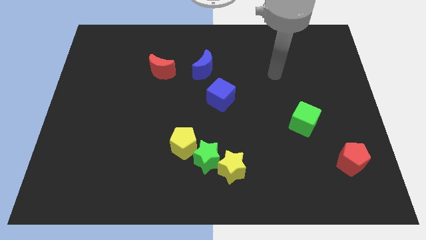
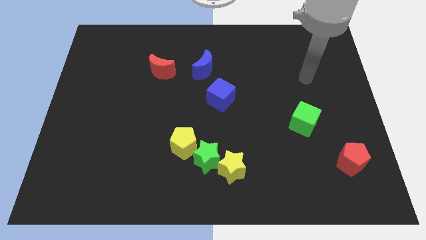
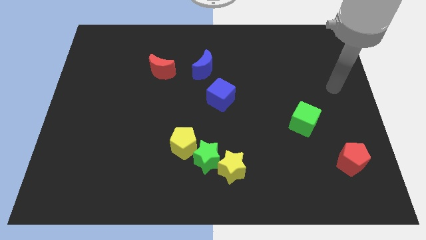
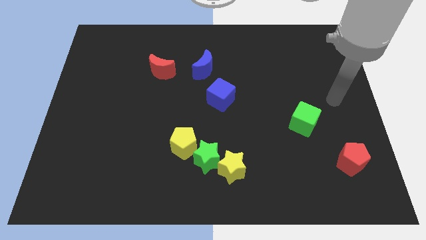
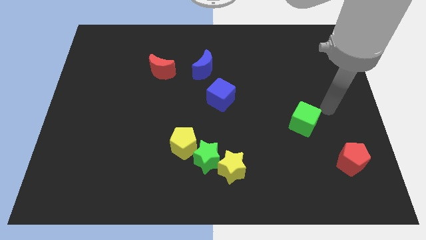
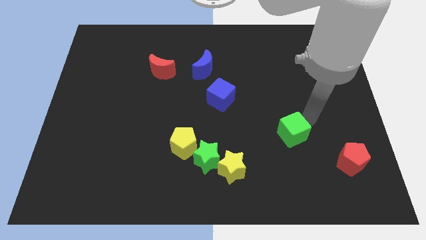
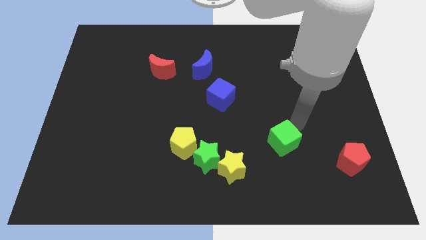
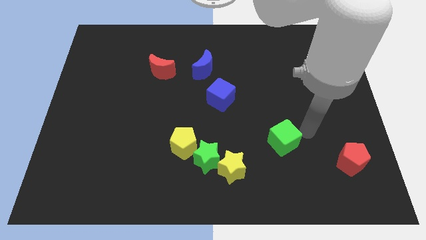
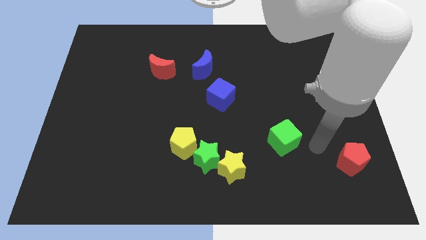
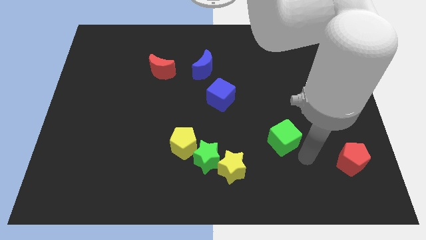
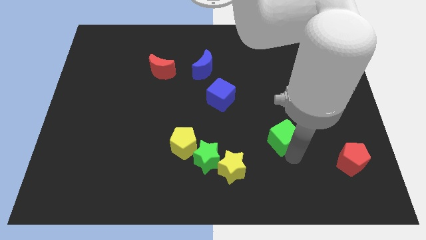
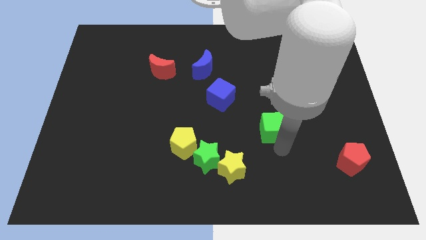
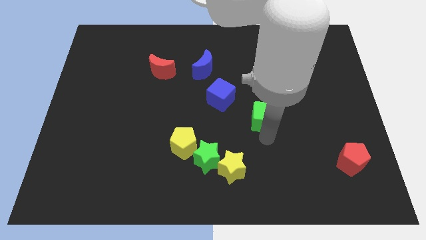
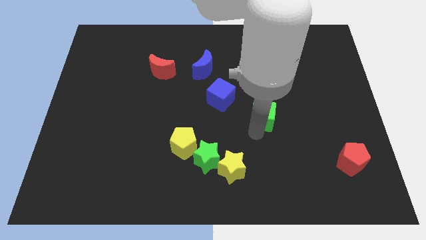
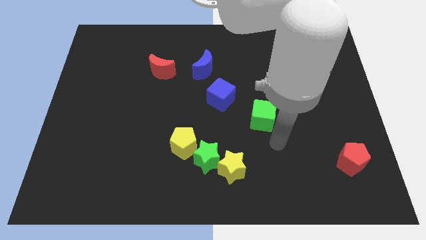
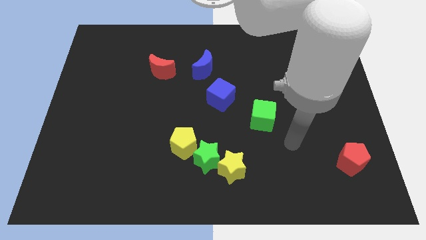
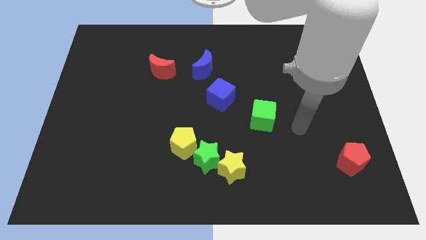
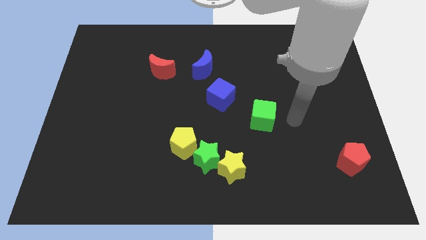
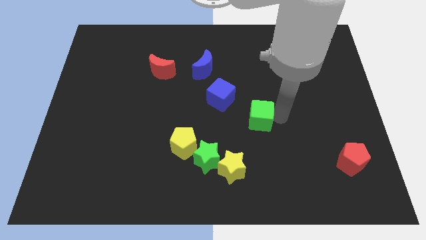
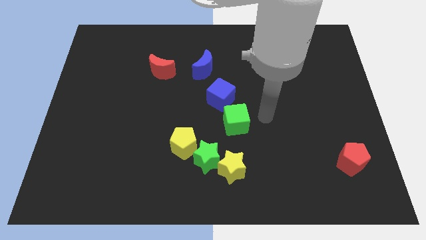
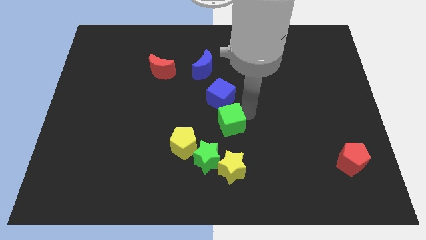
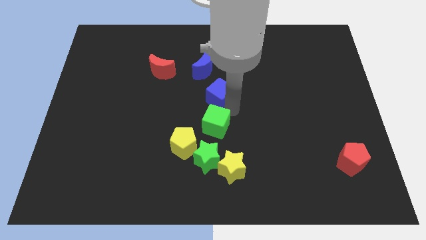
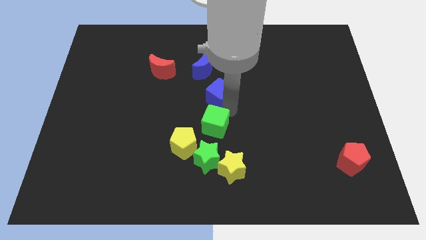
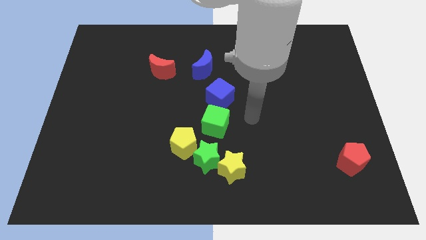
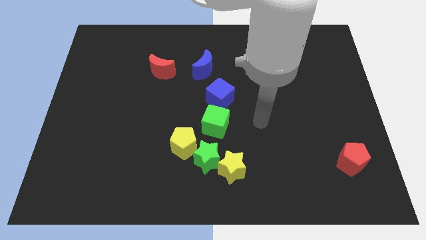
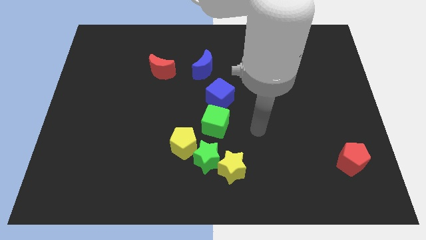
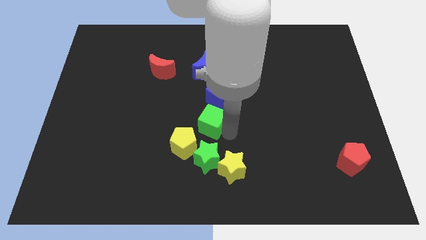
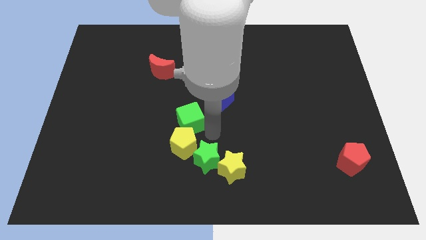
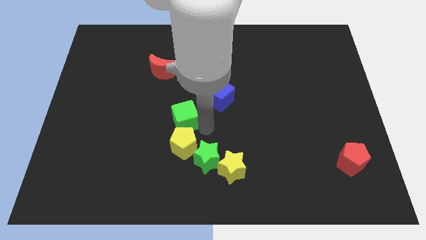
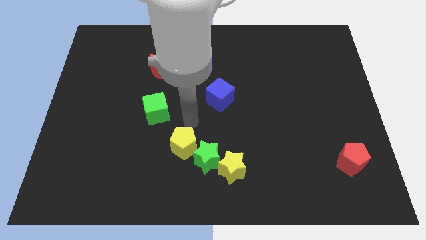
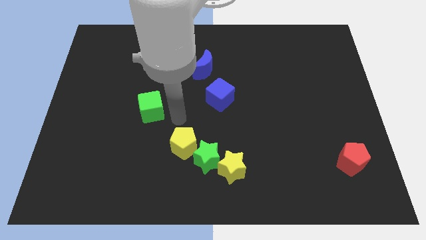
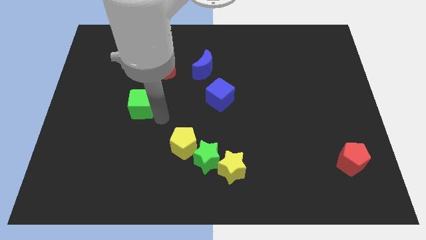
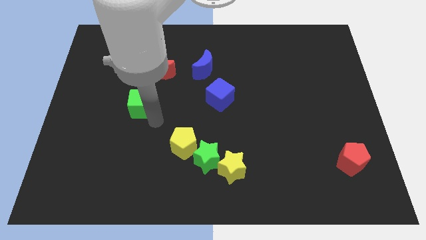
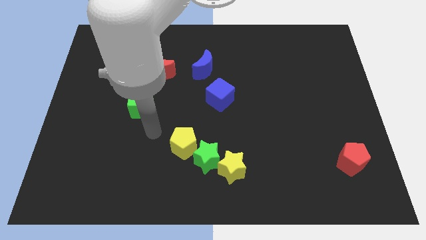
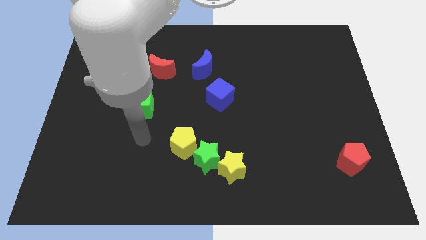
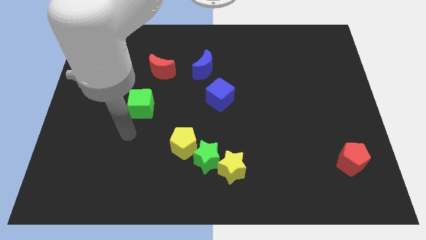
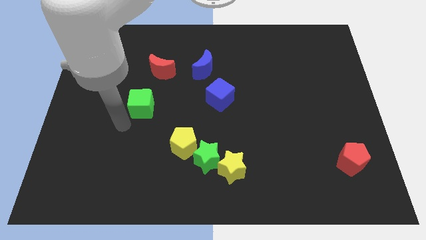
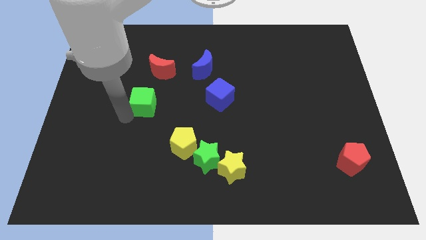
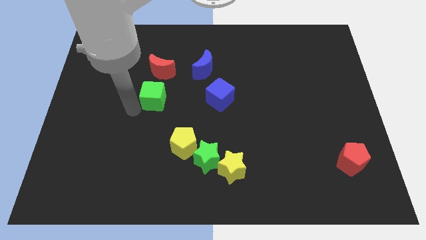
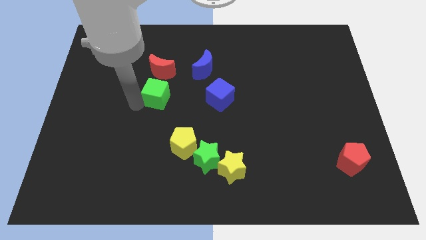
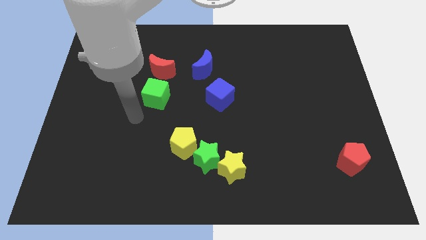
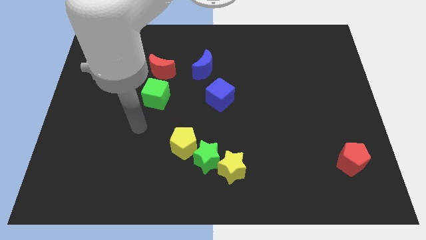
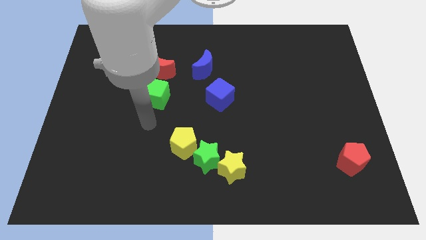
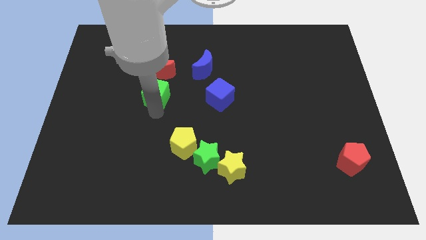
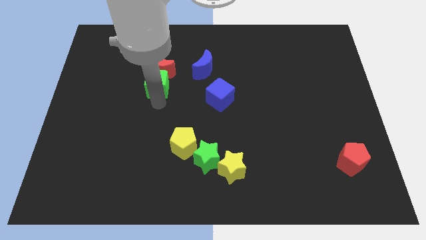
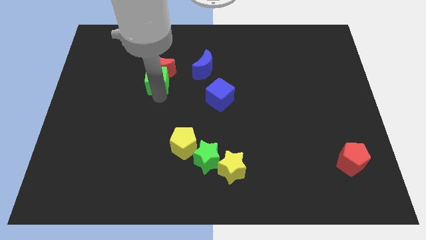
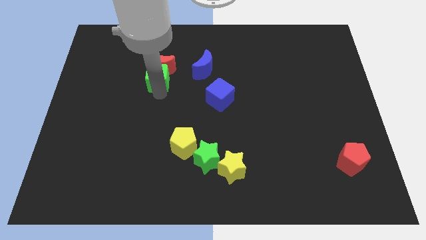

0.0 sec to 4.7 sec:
put the green cube towards the red moon

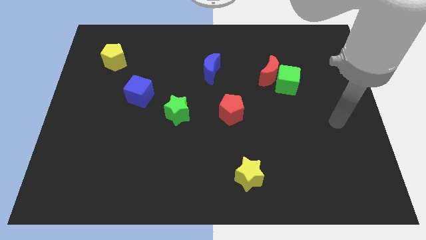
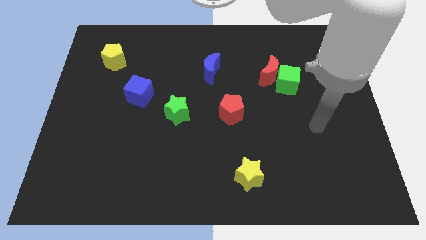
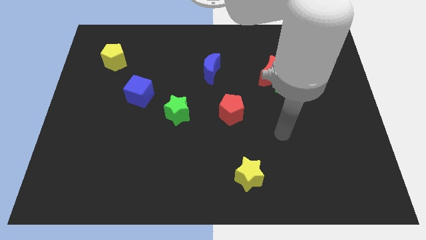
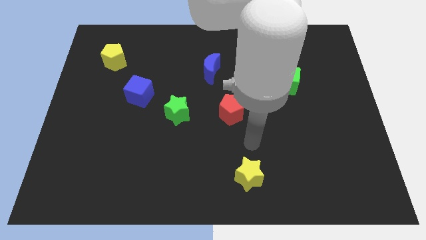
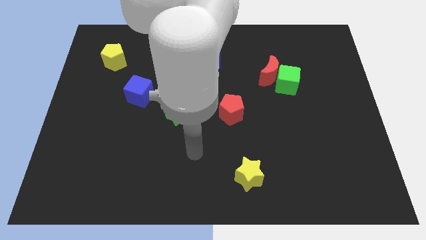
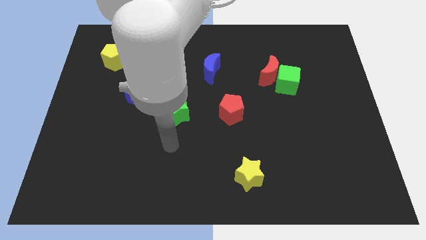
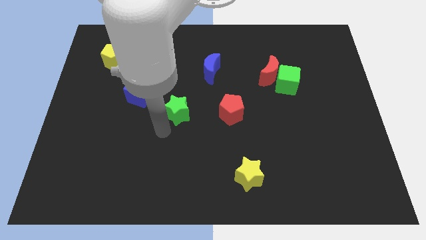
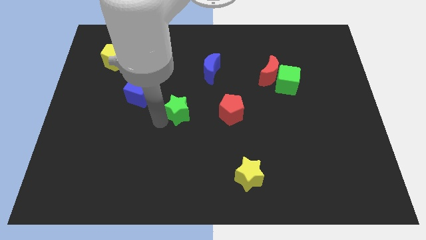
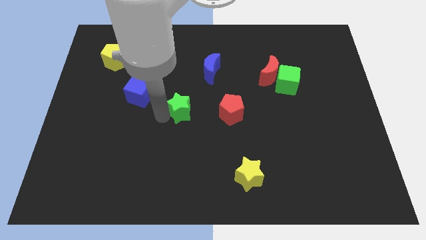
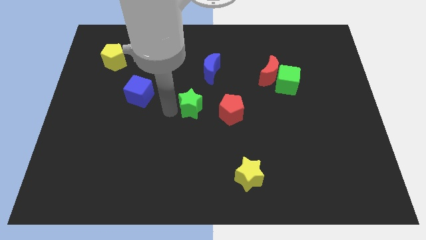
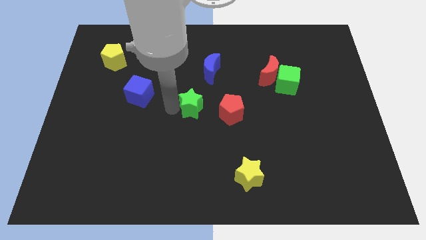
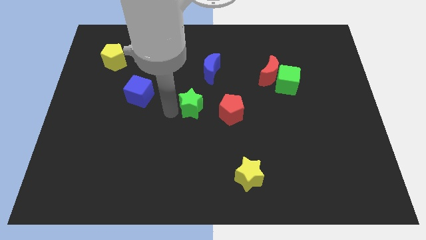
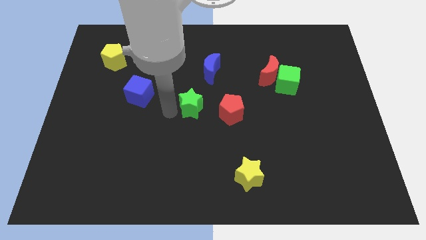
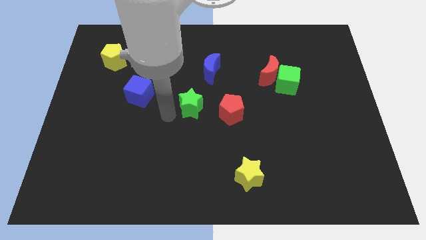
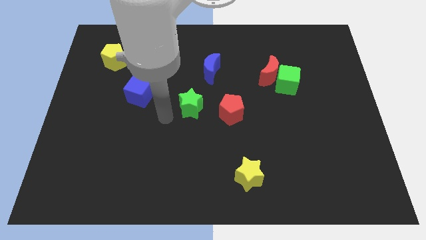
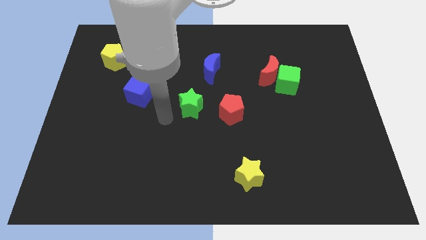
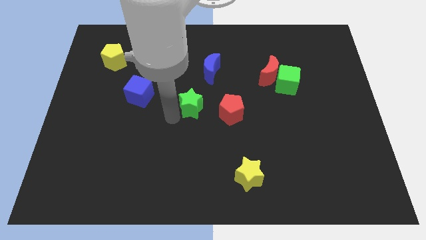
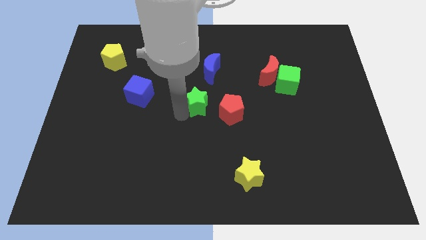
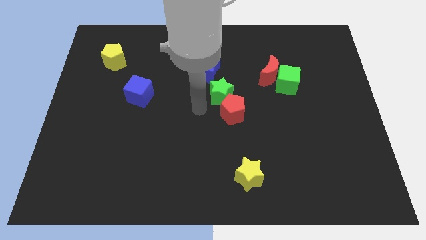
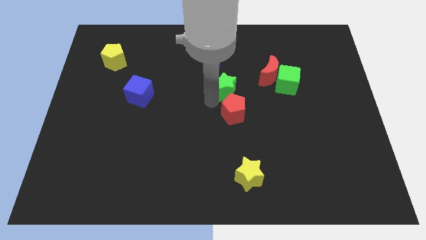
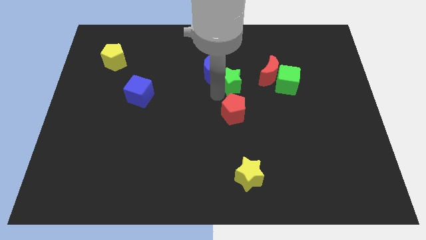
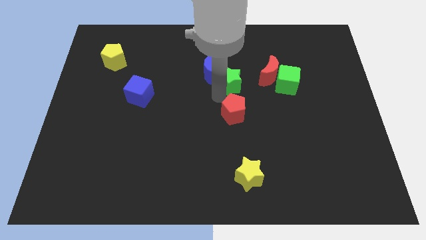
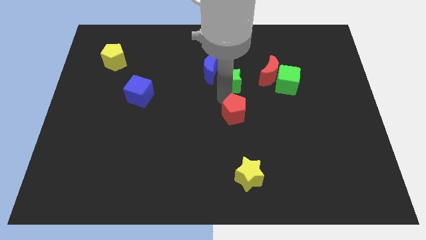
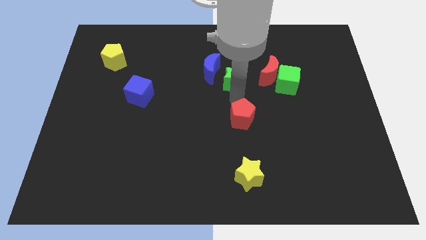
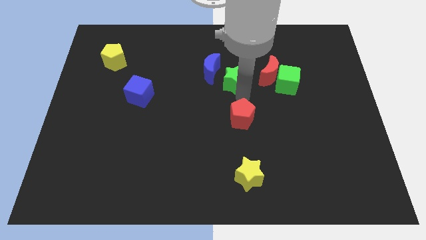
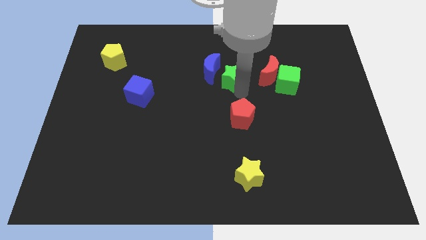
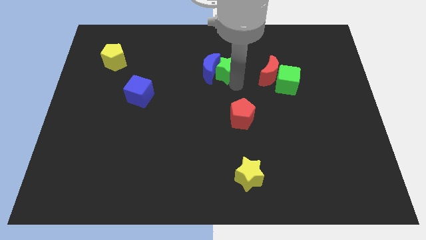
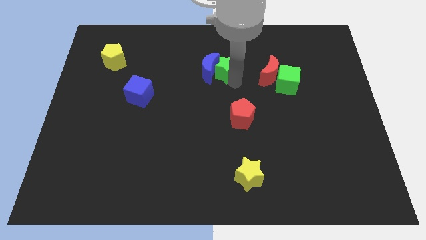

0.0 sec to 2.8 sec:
move the green star to the blue moon

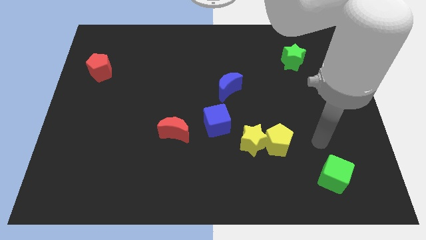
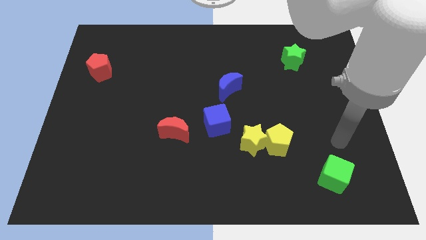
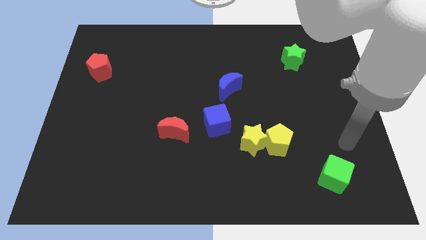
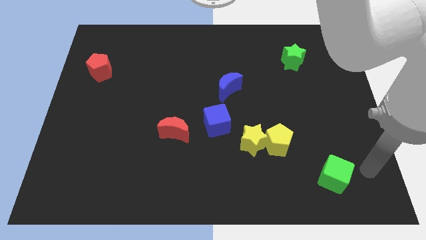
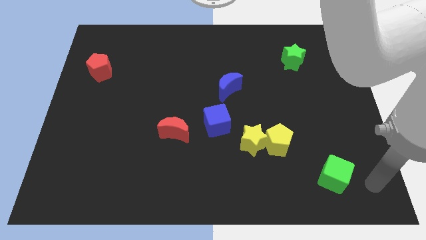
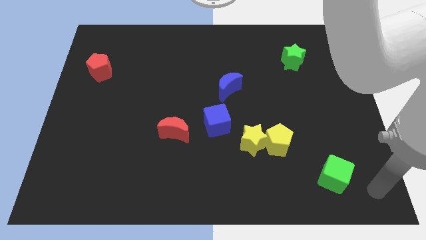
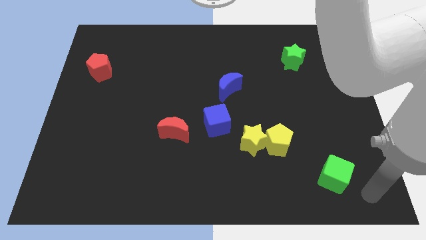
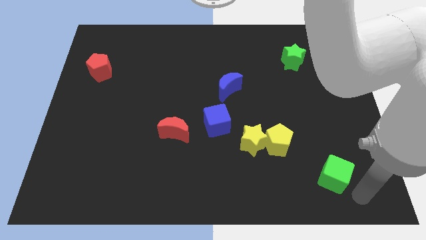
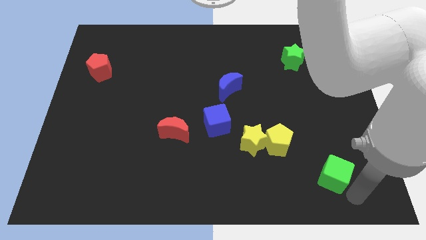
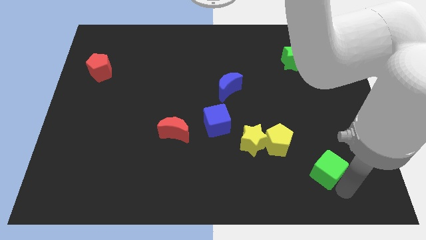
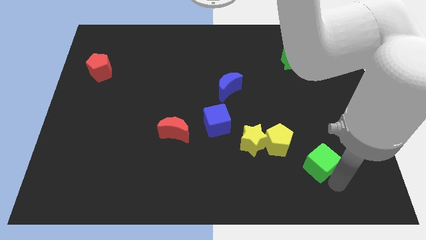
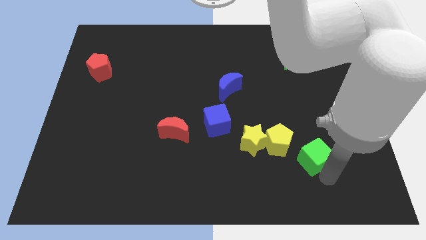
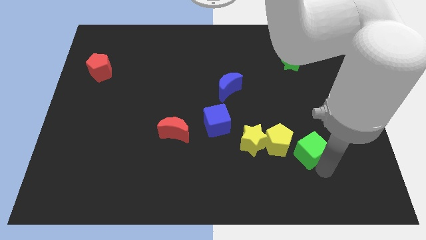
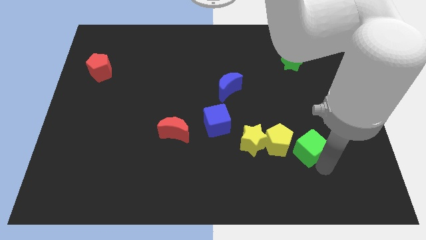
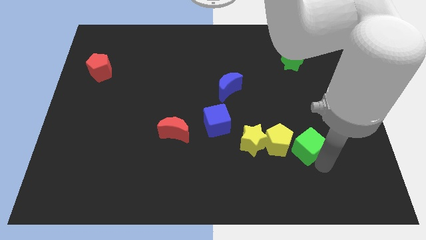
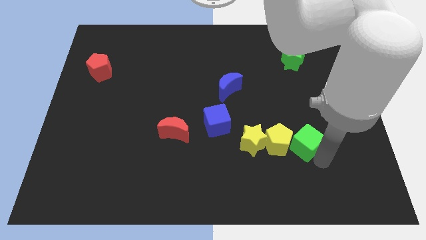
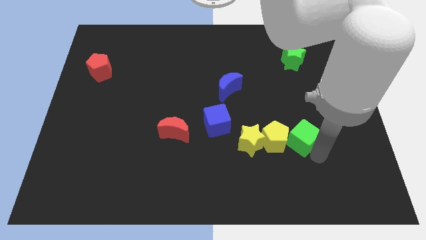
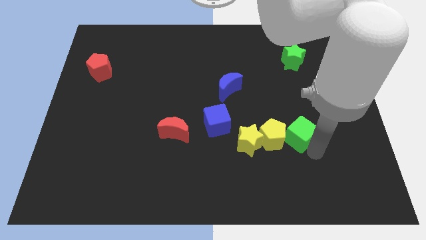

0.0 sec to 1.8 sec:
push the green cube next to the yellow pentagon
